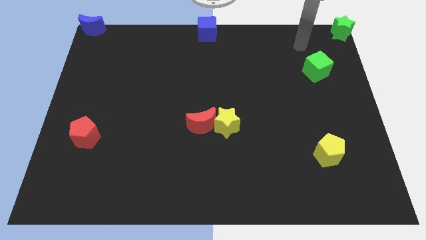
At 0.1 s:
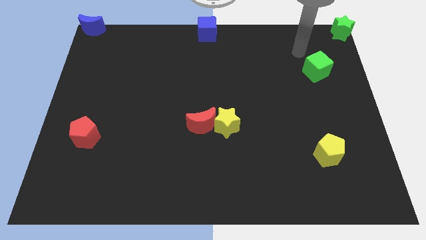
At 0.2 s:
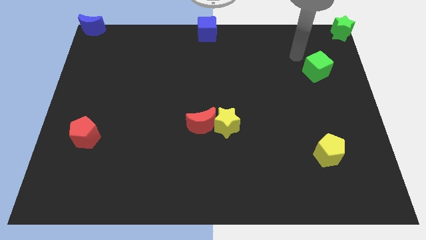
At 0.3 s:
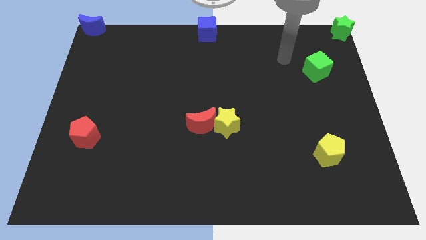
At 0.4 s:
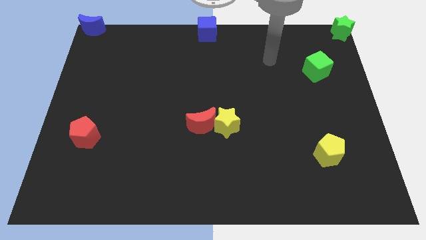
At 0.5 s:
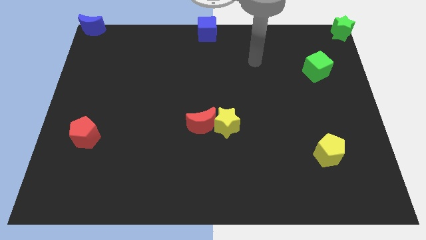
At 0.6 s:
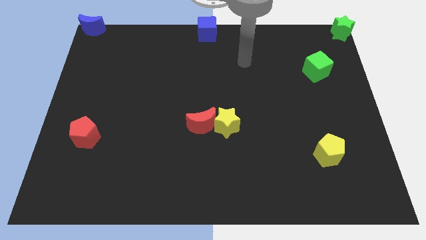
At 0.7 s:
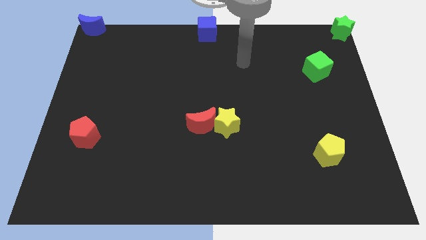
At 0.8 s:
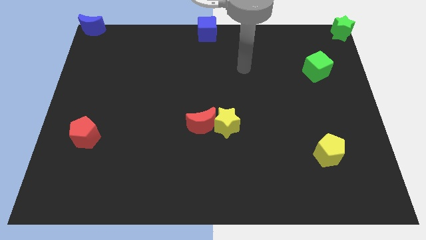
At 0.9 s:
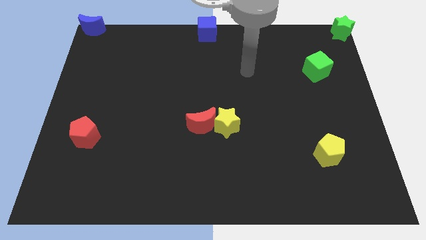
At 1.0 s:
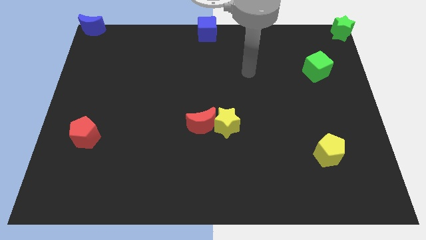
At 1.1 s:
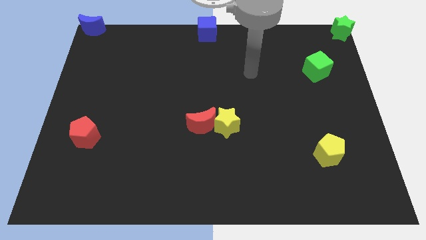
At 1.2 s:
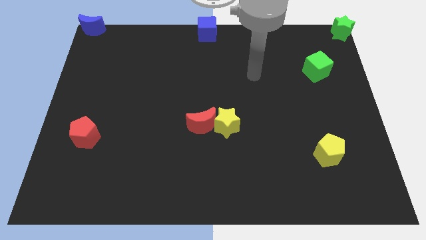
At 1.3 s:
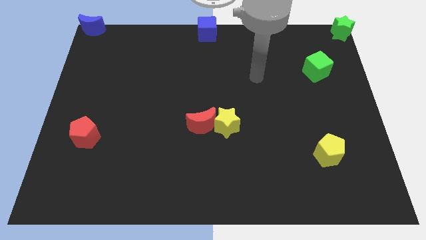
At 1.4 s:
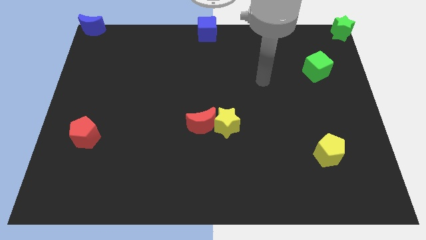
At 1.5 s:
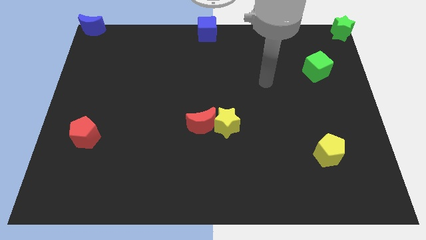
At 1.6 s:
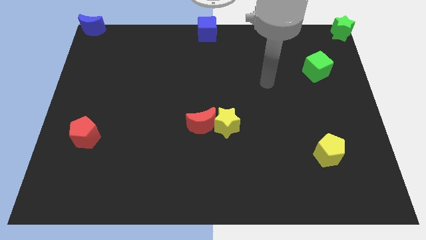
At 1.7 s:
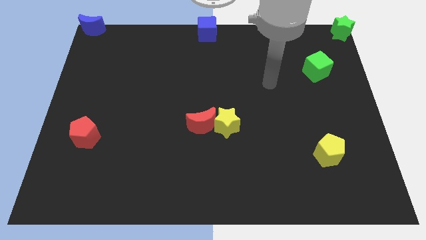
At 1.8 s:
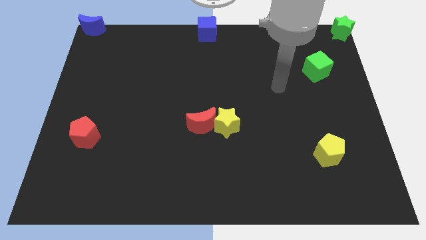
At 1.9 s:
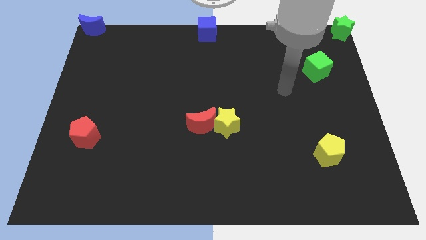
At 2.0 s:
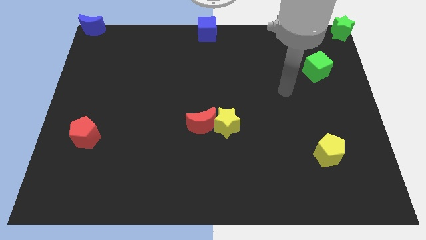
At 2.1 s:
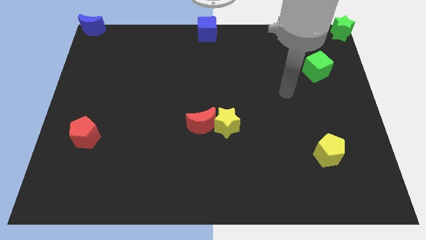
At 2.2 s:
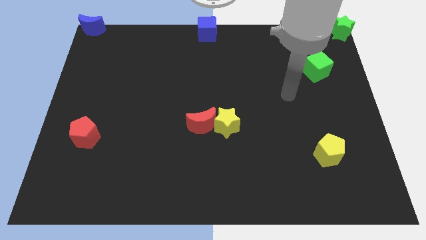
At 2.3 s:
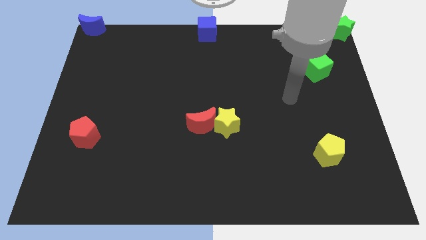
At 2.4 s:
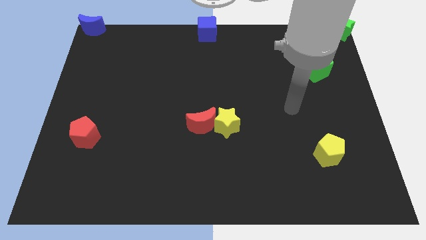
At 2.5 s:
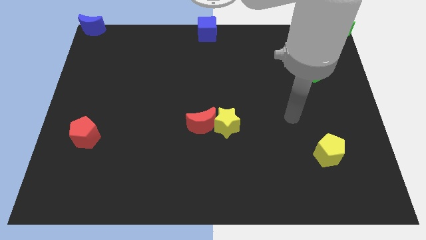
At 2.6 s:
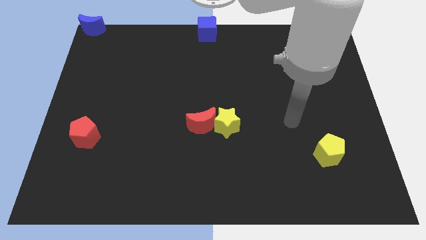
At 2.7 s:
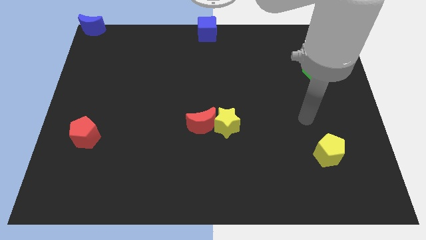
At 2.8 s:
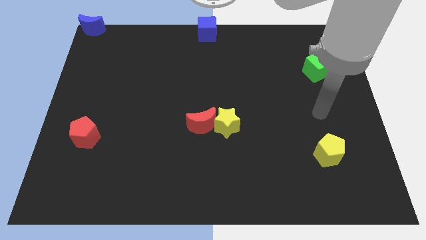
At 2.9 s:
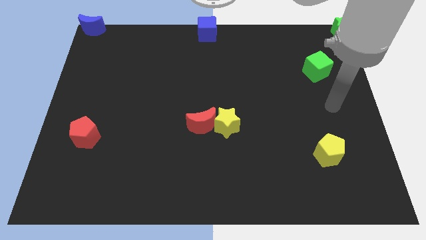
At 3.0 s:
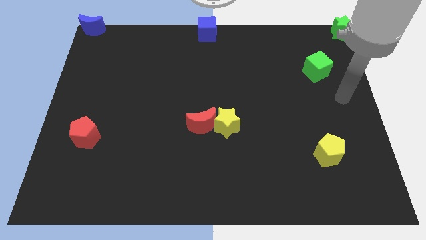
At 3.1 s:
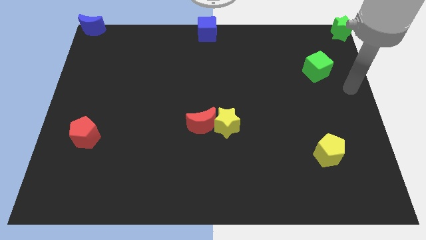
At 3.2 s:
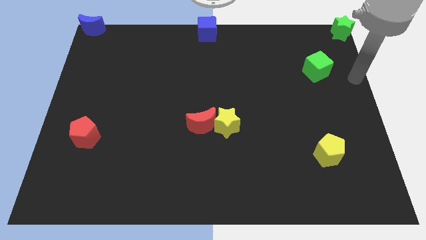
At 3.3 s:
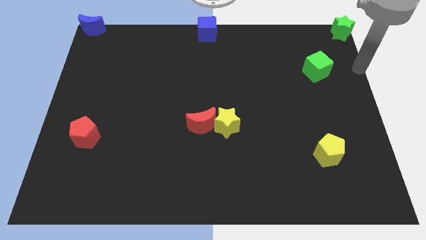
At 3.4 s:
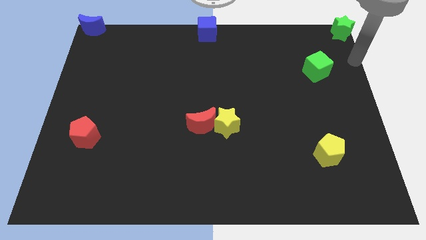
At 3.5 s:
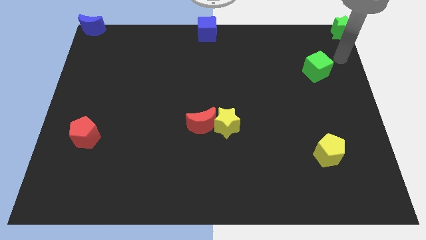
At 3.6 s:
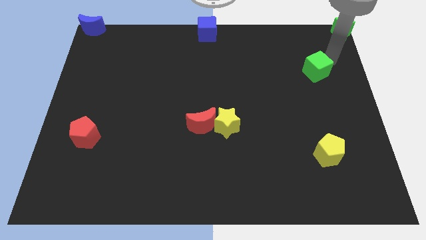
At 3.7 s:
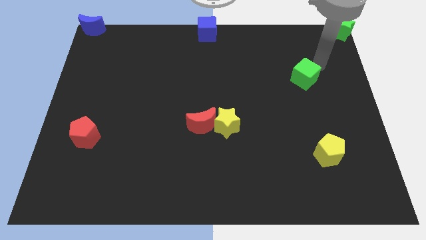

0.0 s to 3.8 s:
place your arm near to the green cube

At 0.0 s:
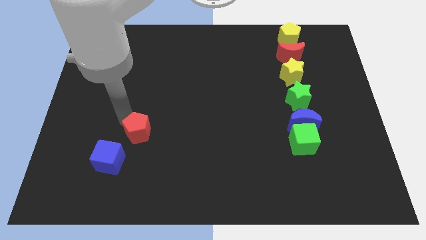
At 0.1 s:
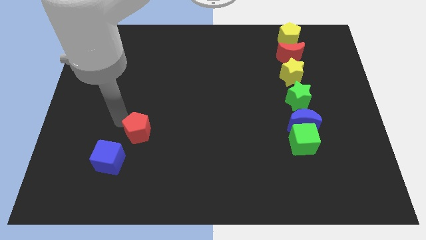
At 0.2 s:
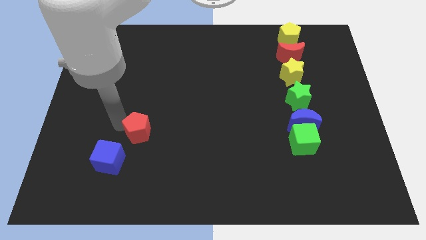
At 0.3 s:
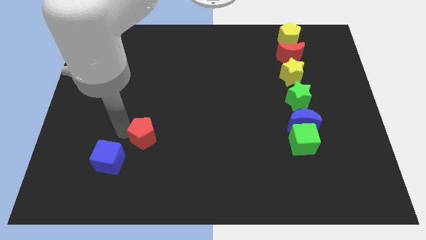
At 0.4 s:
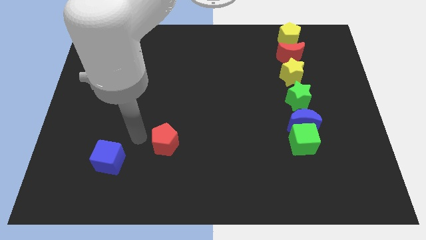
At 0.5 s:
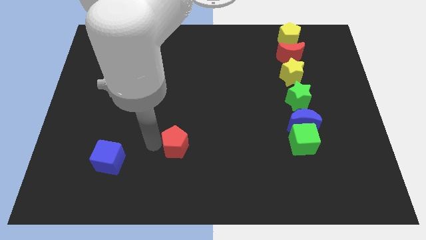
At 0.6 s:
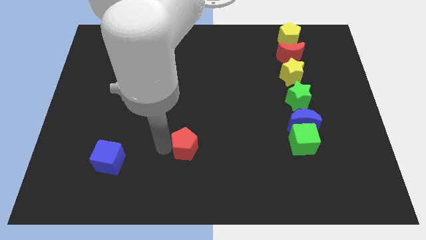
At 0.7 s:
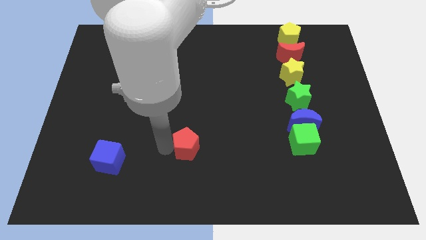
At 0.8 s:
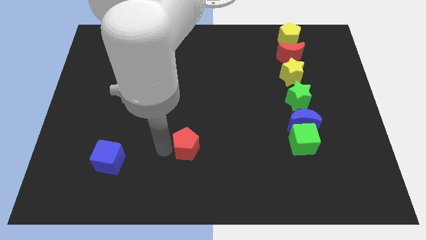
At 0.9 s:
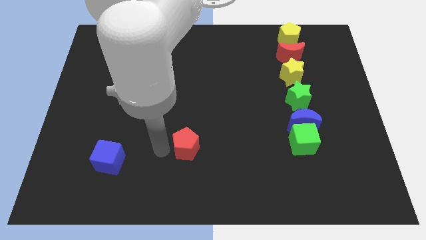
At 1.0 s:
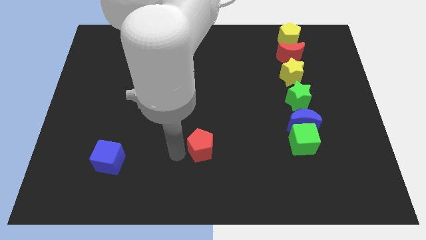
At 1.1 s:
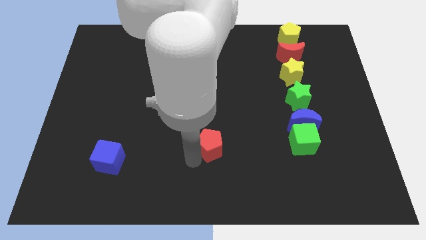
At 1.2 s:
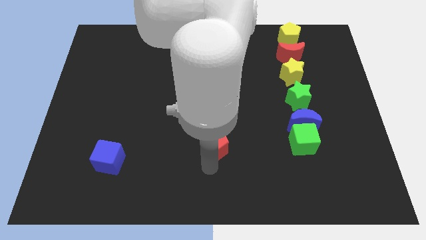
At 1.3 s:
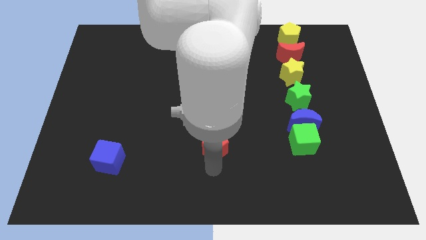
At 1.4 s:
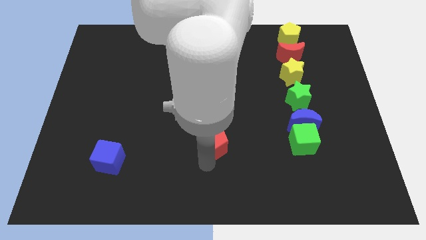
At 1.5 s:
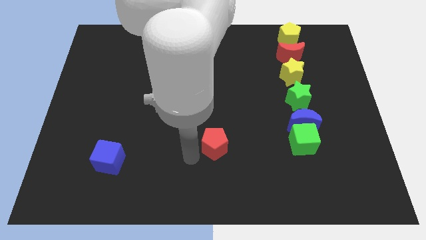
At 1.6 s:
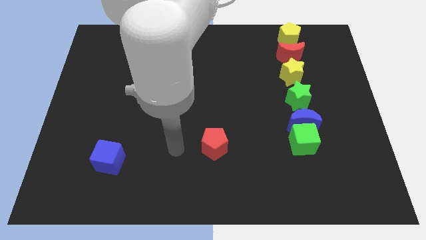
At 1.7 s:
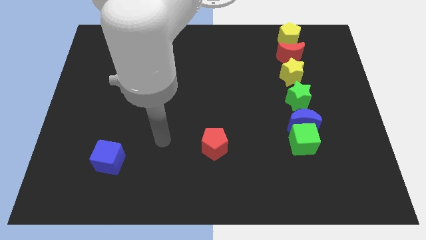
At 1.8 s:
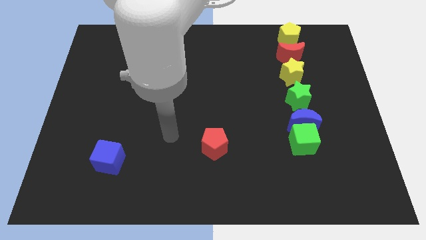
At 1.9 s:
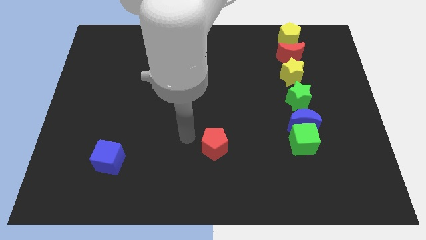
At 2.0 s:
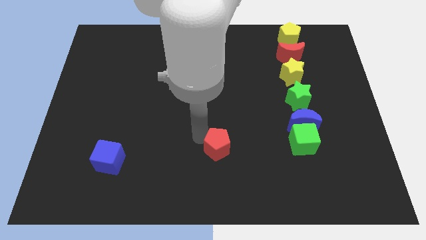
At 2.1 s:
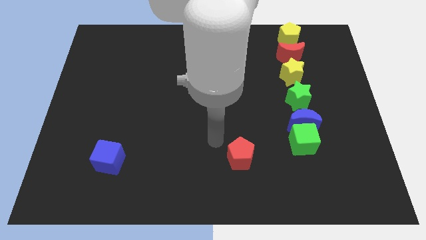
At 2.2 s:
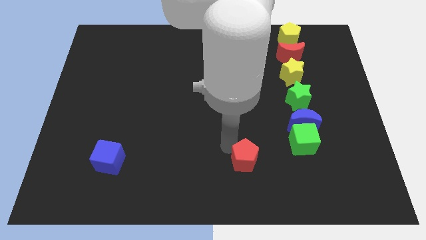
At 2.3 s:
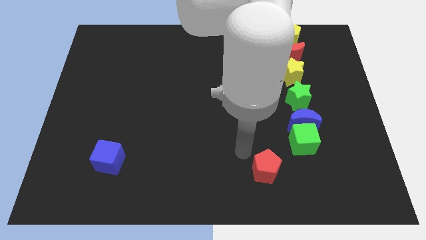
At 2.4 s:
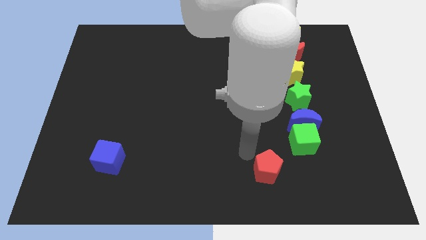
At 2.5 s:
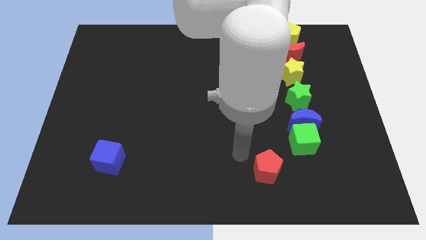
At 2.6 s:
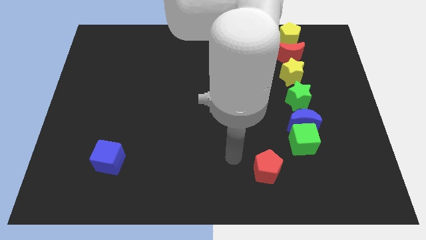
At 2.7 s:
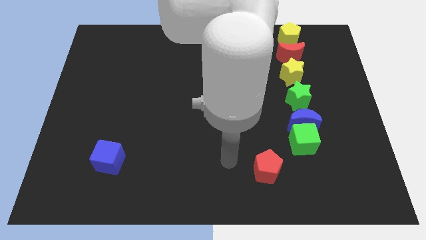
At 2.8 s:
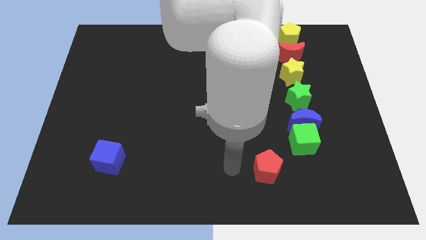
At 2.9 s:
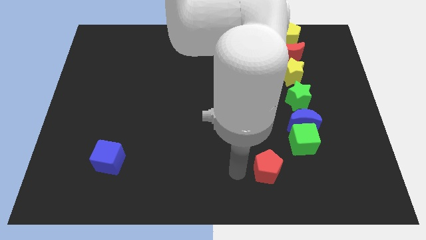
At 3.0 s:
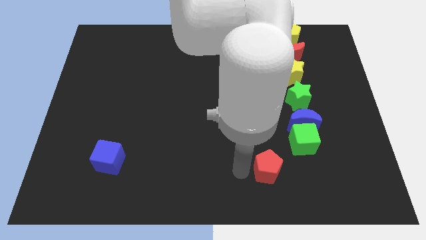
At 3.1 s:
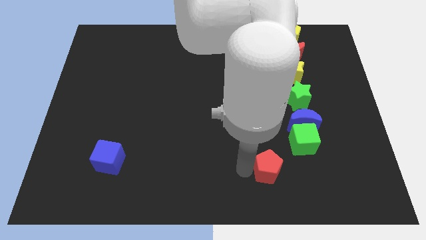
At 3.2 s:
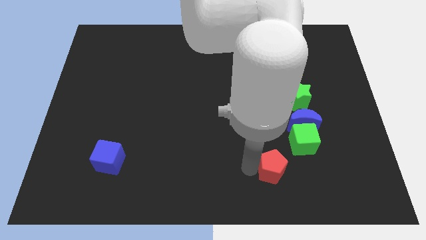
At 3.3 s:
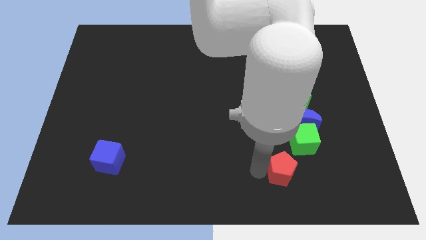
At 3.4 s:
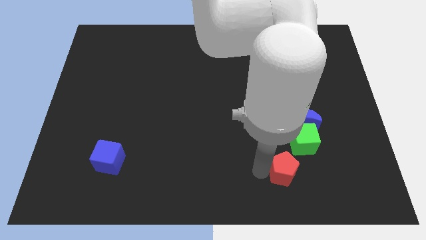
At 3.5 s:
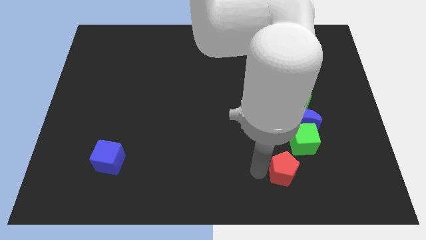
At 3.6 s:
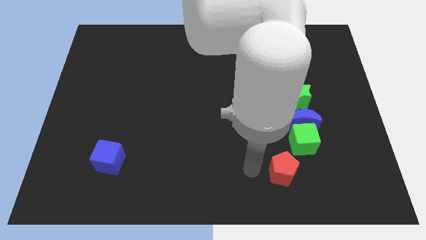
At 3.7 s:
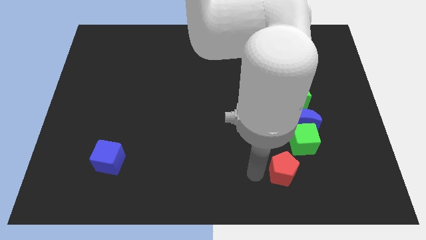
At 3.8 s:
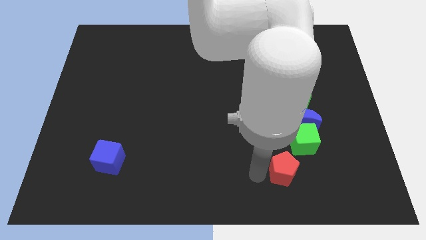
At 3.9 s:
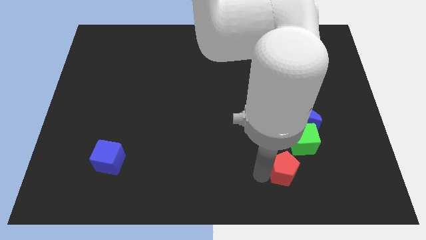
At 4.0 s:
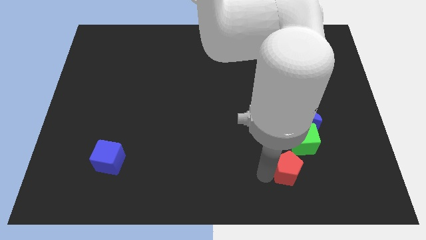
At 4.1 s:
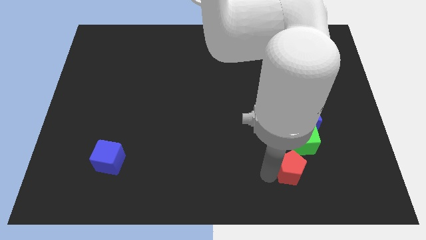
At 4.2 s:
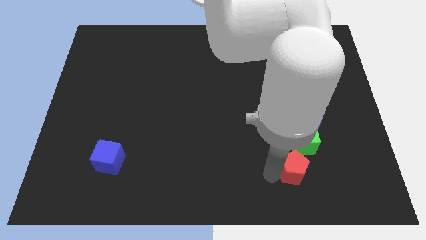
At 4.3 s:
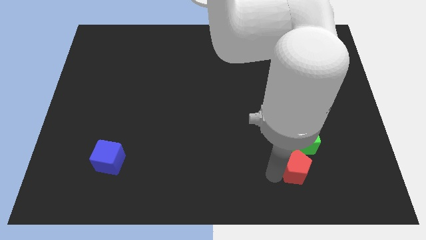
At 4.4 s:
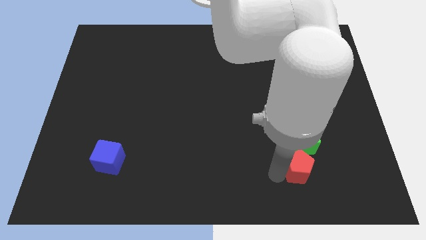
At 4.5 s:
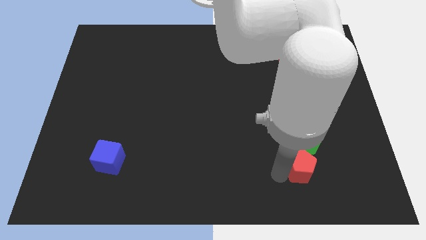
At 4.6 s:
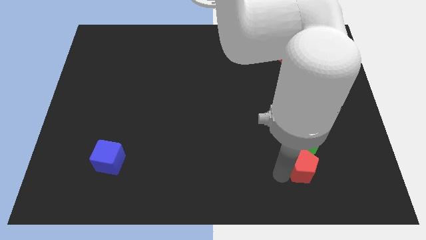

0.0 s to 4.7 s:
place the red pentagon below the green cube

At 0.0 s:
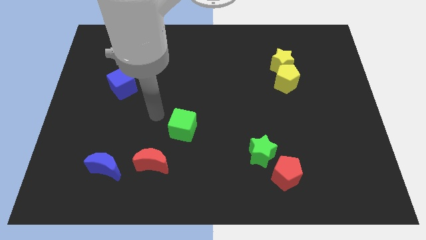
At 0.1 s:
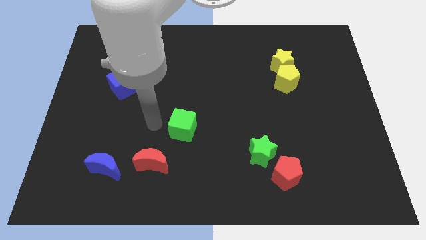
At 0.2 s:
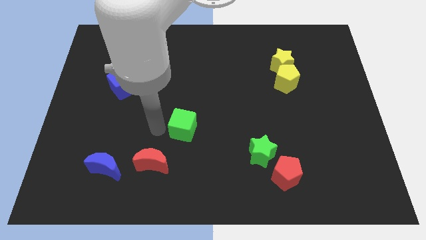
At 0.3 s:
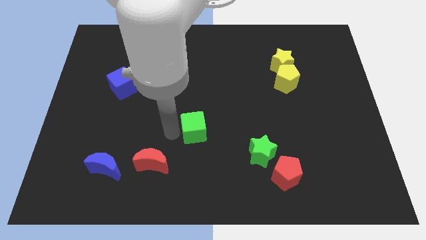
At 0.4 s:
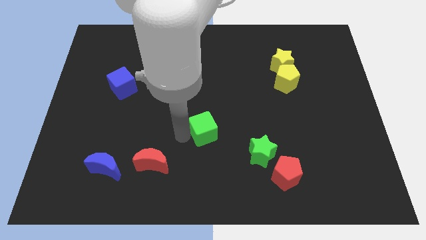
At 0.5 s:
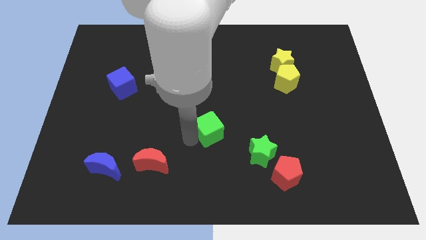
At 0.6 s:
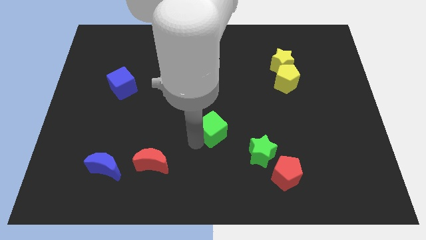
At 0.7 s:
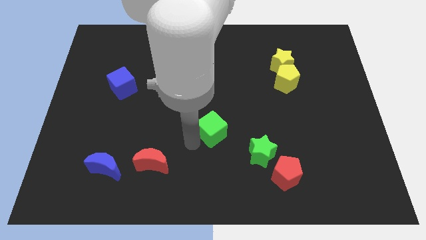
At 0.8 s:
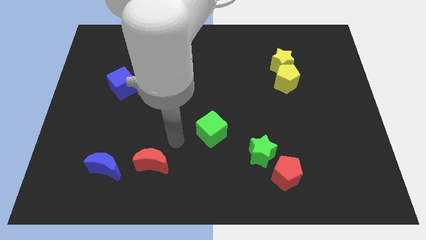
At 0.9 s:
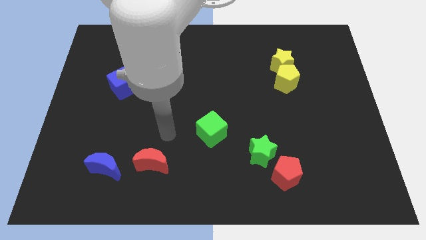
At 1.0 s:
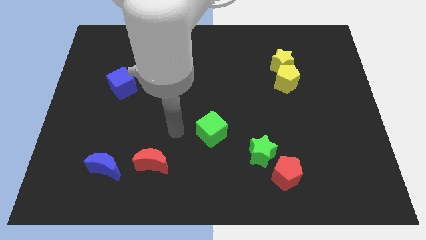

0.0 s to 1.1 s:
push green cube towards green star
